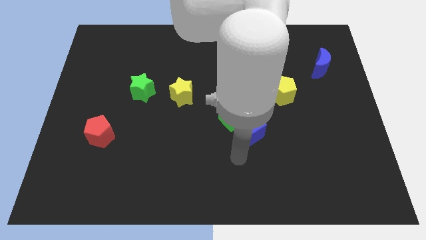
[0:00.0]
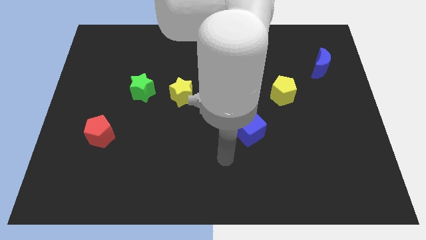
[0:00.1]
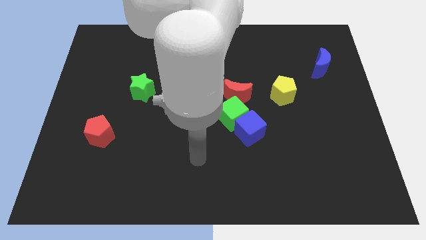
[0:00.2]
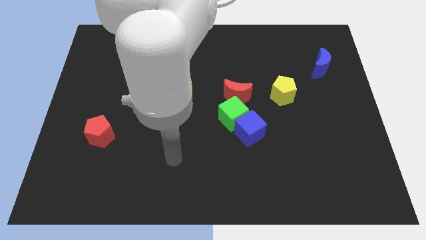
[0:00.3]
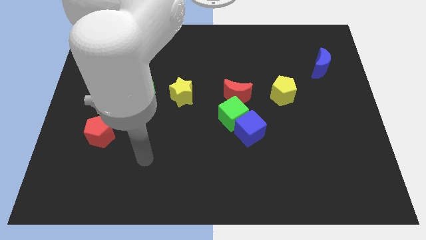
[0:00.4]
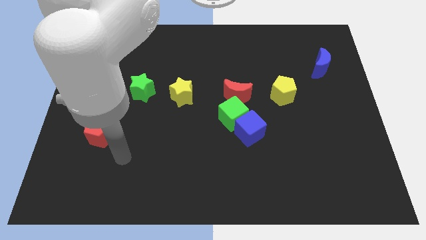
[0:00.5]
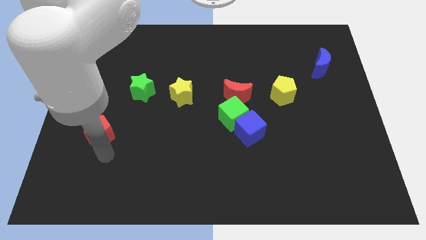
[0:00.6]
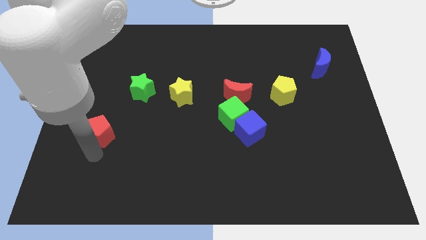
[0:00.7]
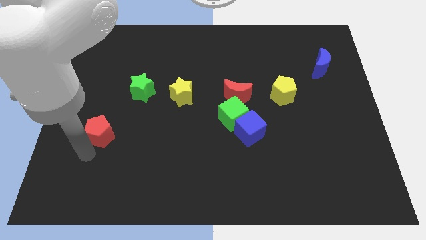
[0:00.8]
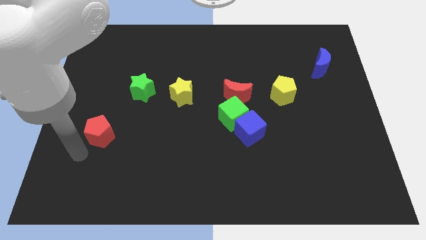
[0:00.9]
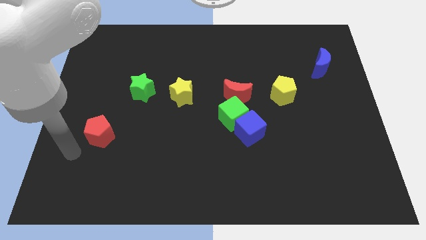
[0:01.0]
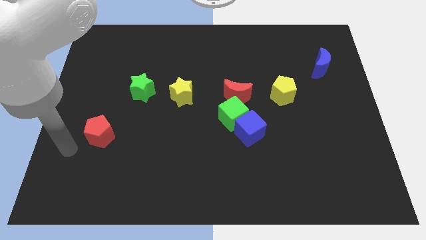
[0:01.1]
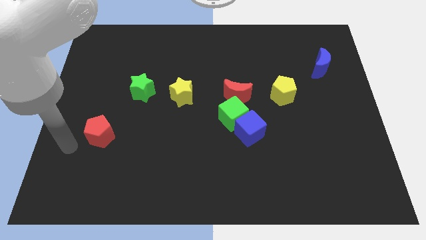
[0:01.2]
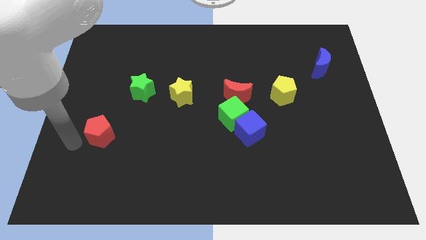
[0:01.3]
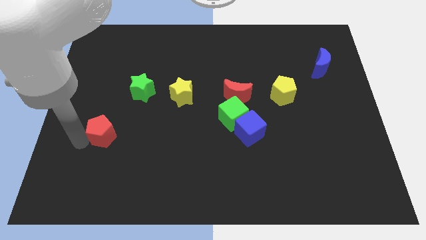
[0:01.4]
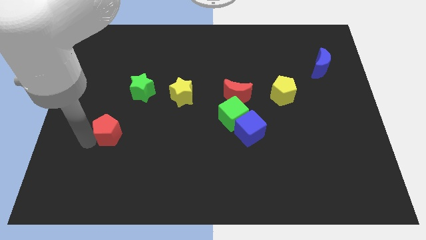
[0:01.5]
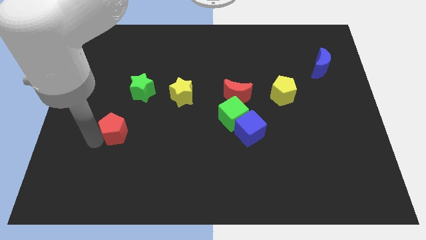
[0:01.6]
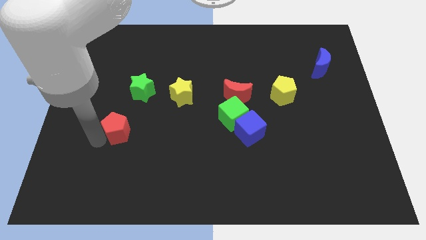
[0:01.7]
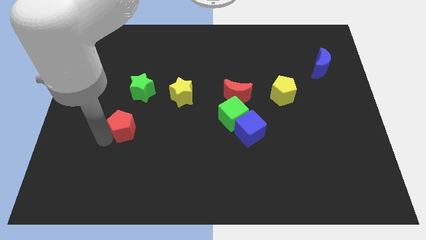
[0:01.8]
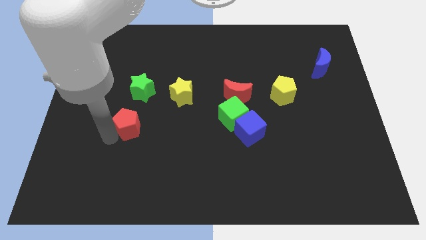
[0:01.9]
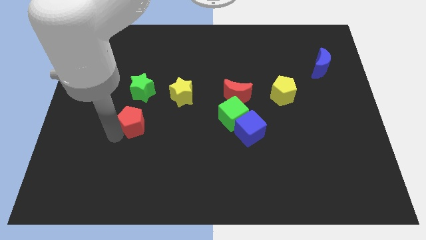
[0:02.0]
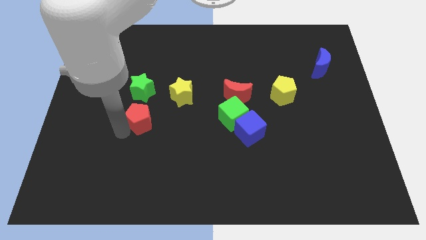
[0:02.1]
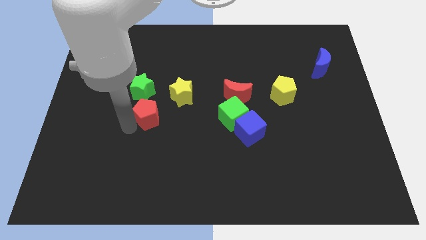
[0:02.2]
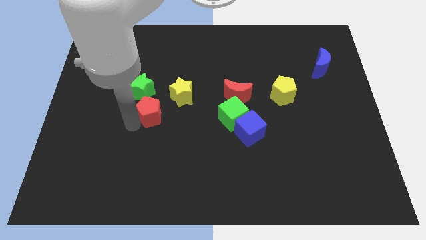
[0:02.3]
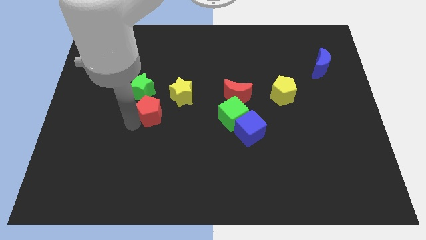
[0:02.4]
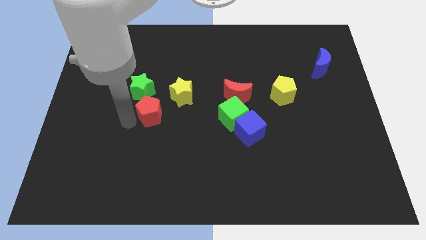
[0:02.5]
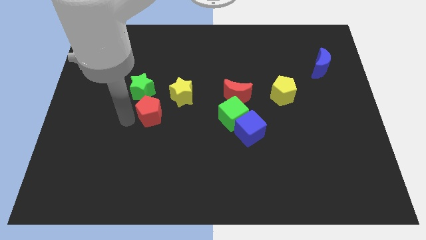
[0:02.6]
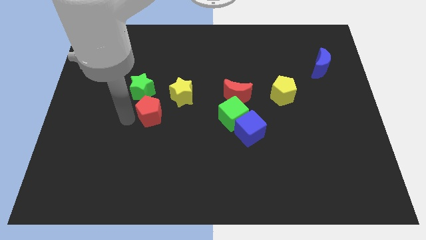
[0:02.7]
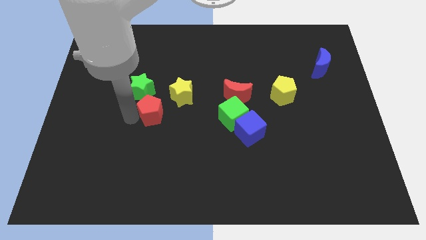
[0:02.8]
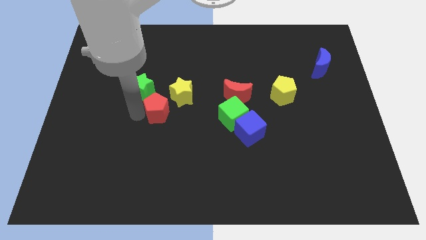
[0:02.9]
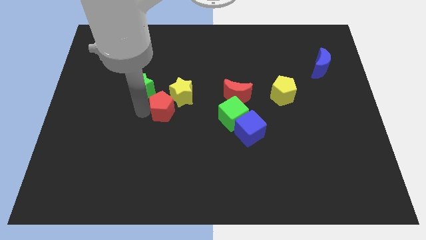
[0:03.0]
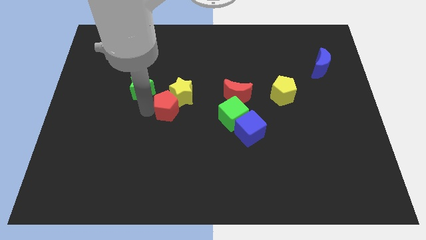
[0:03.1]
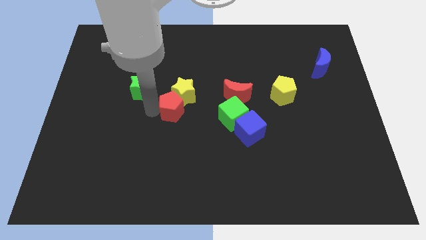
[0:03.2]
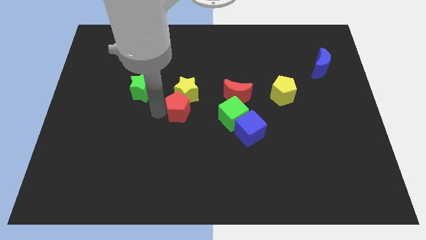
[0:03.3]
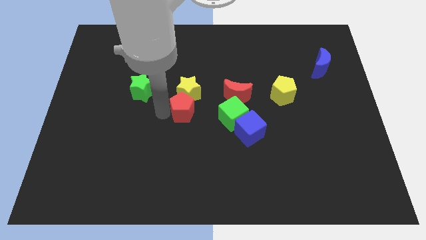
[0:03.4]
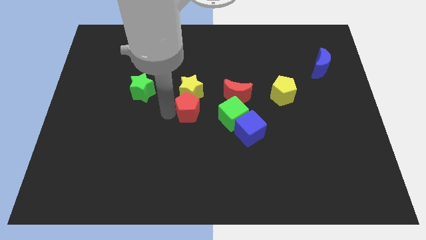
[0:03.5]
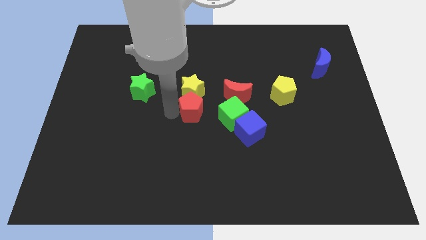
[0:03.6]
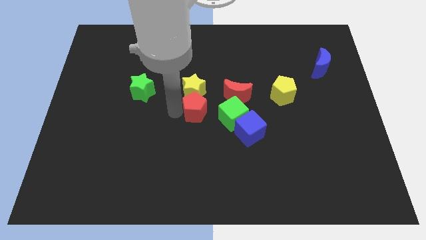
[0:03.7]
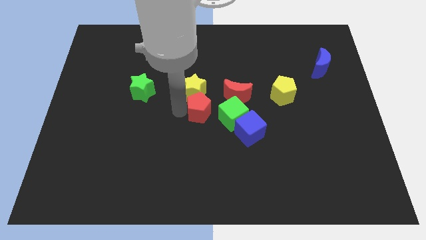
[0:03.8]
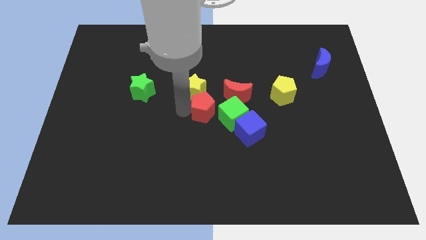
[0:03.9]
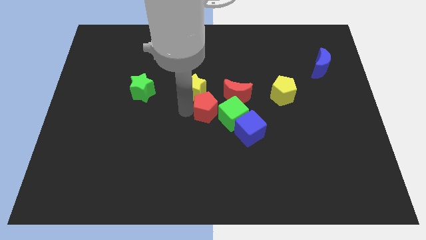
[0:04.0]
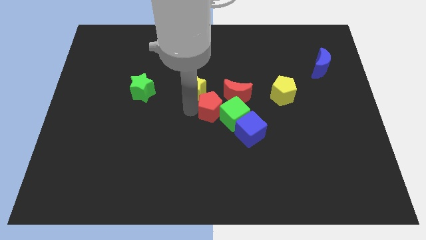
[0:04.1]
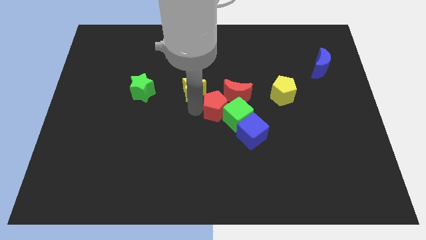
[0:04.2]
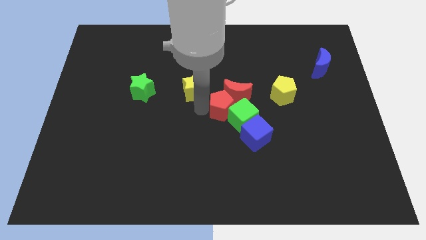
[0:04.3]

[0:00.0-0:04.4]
slide the red pentagon next to the green cube

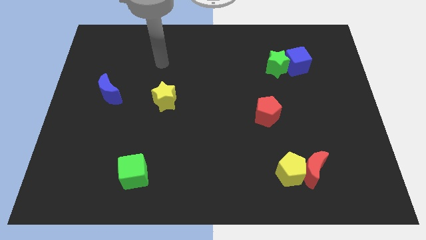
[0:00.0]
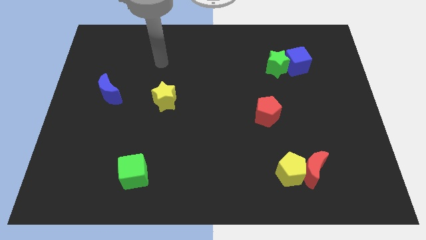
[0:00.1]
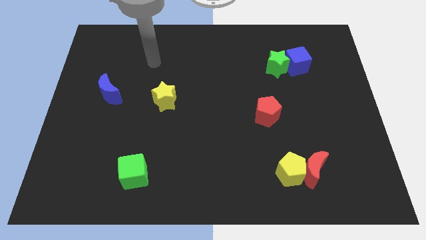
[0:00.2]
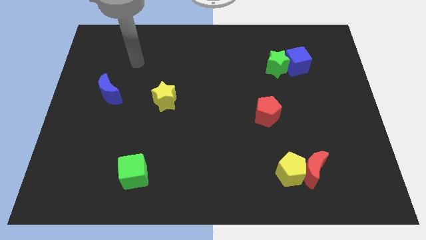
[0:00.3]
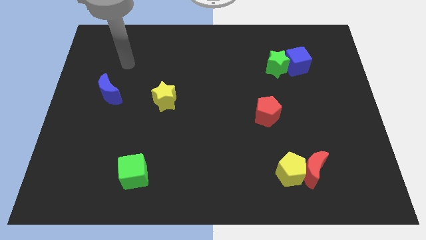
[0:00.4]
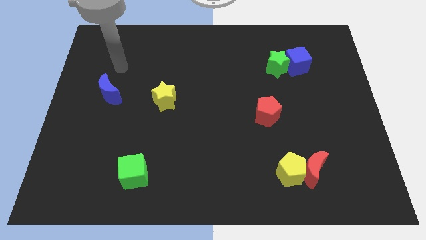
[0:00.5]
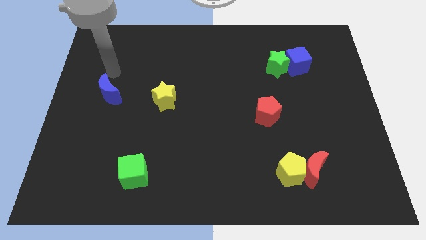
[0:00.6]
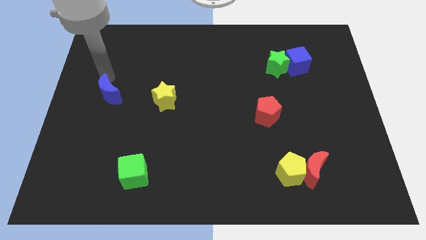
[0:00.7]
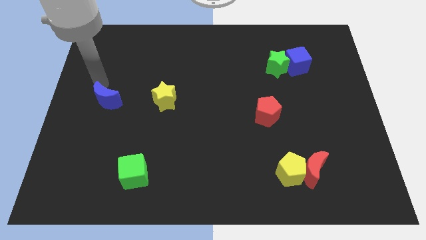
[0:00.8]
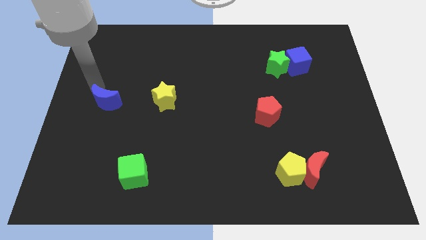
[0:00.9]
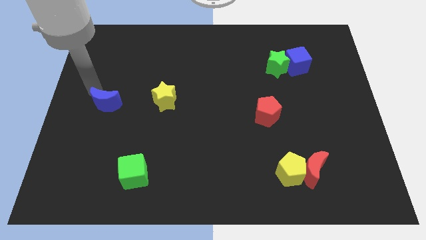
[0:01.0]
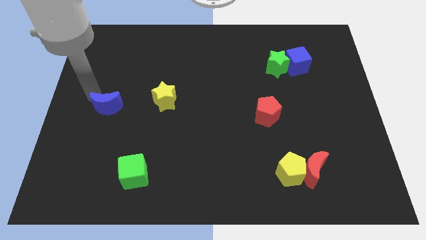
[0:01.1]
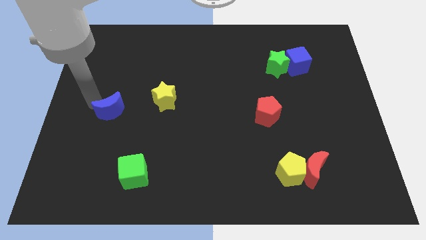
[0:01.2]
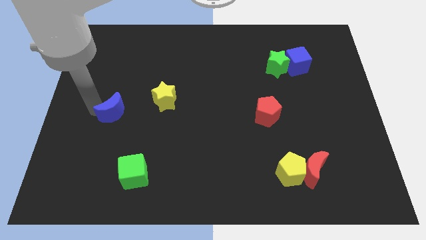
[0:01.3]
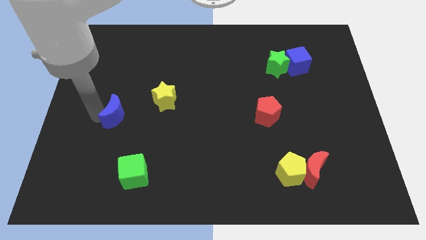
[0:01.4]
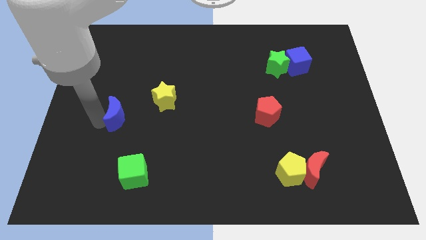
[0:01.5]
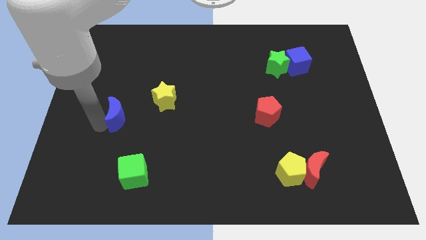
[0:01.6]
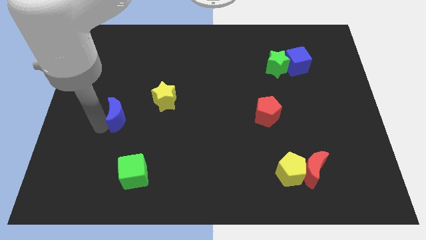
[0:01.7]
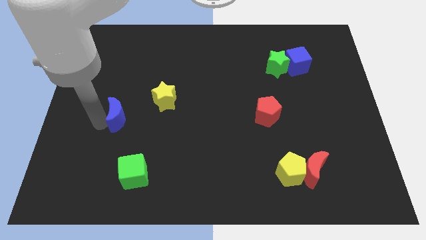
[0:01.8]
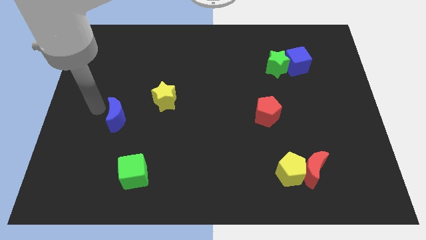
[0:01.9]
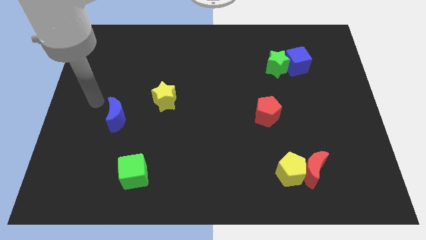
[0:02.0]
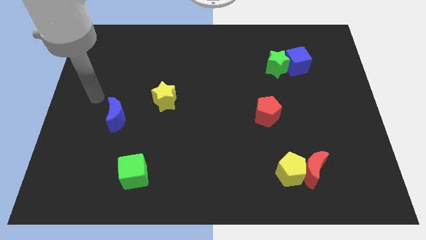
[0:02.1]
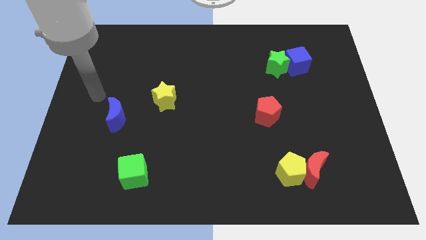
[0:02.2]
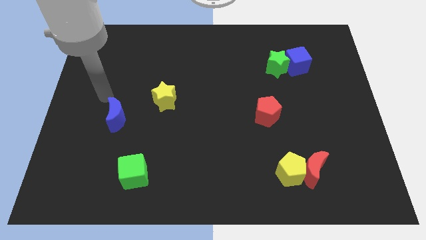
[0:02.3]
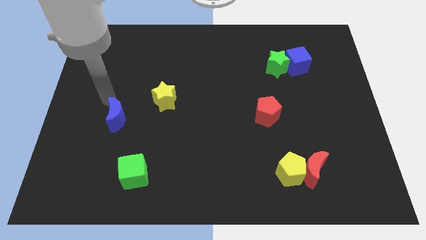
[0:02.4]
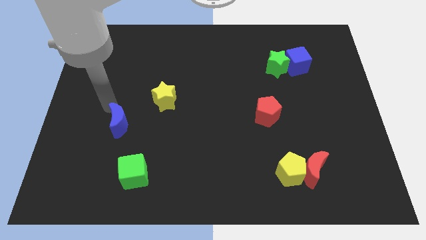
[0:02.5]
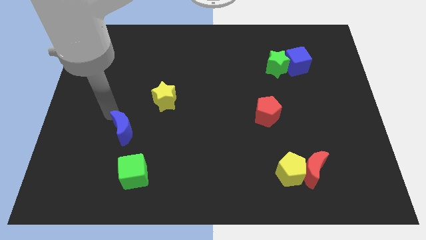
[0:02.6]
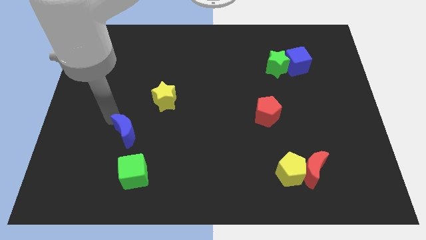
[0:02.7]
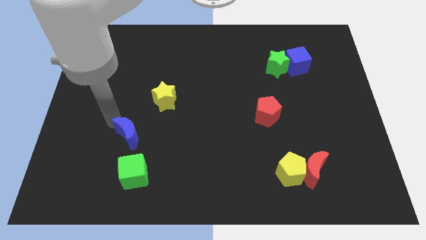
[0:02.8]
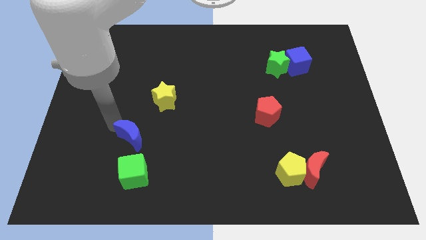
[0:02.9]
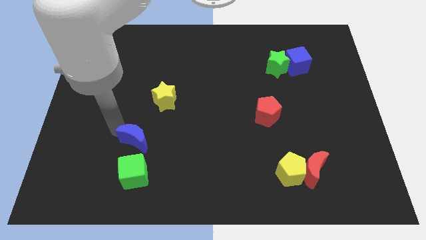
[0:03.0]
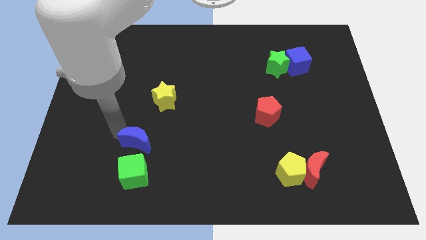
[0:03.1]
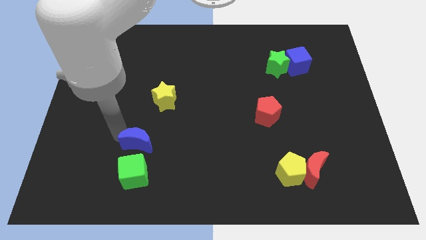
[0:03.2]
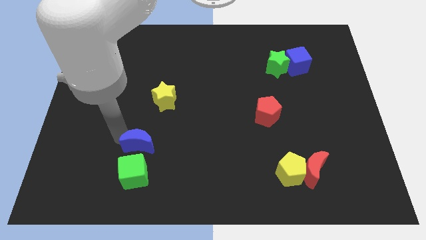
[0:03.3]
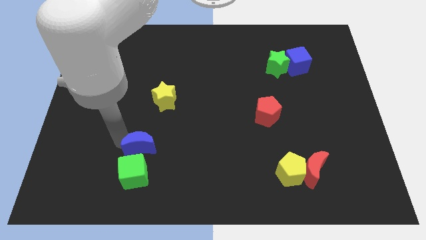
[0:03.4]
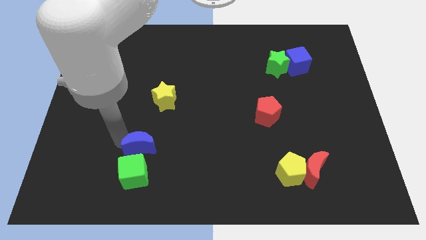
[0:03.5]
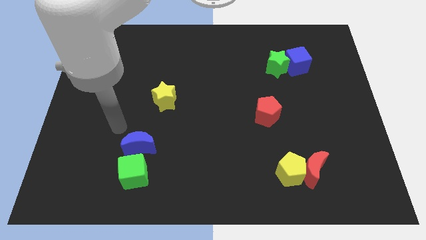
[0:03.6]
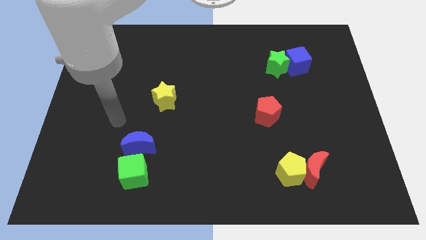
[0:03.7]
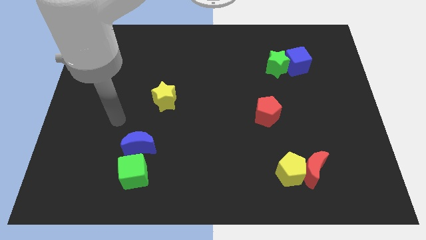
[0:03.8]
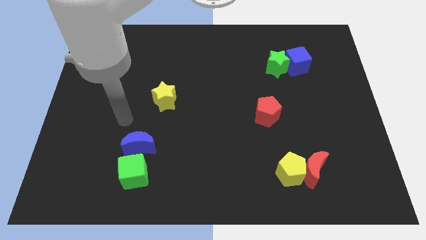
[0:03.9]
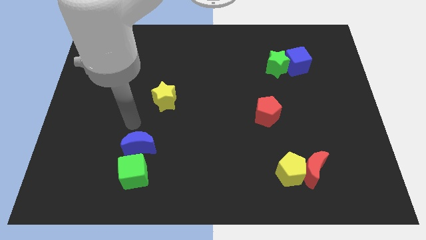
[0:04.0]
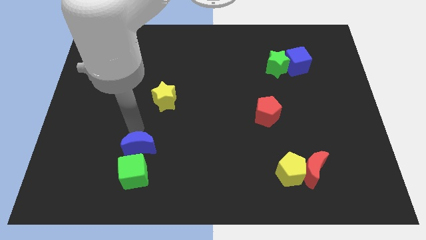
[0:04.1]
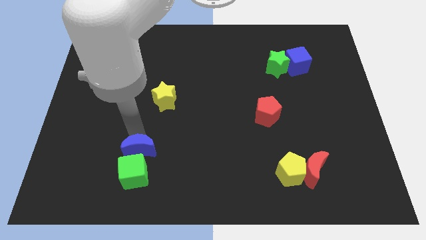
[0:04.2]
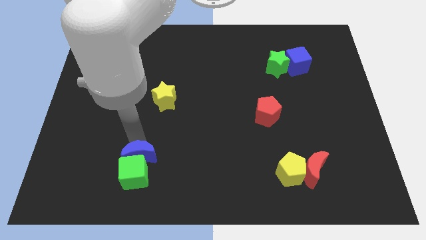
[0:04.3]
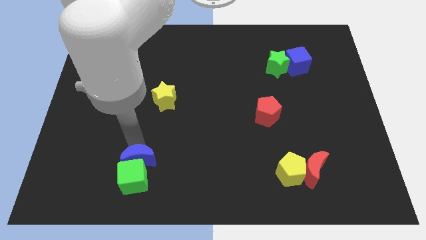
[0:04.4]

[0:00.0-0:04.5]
put the blue moon close to the green cube
